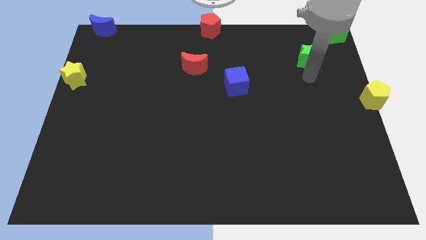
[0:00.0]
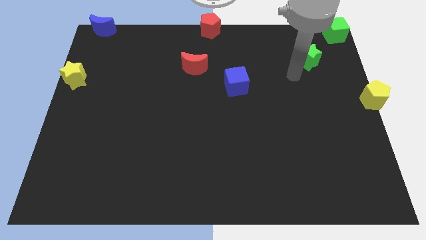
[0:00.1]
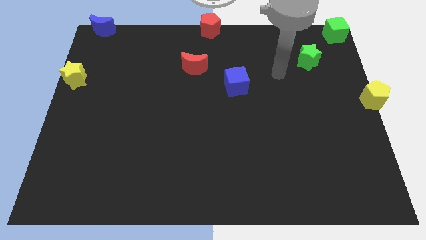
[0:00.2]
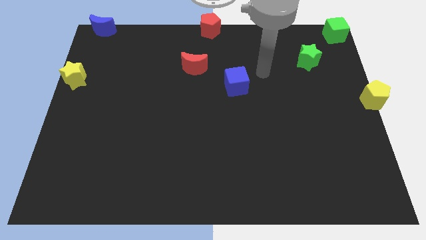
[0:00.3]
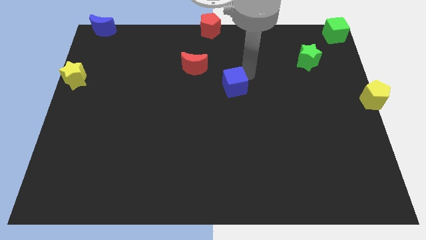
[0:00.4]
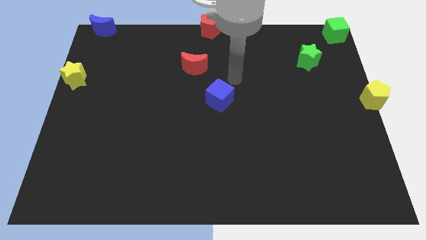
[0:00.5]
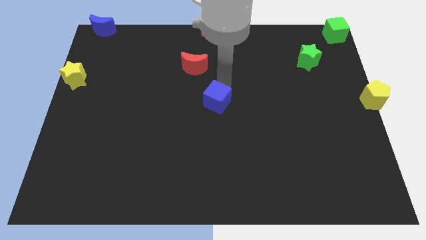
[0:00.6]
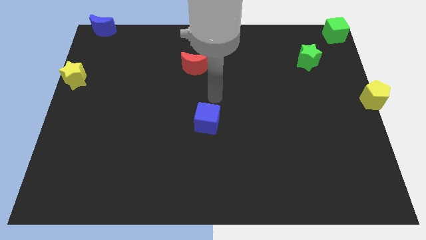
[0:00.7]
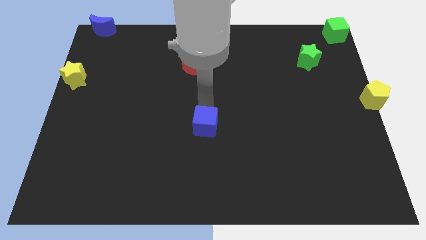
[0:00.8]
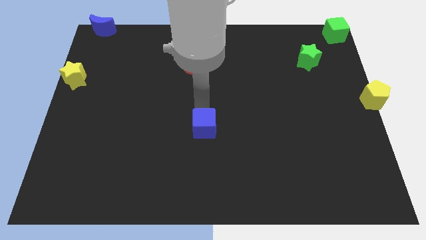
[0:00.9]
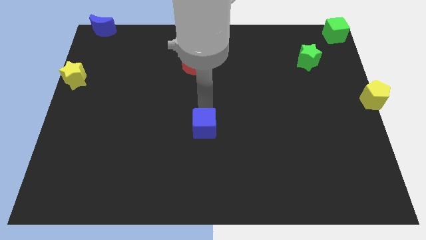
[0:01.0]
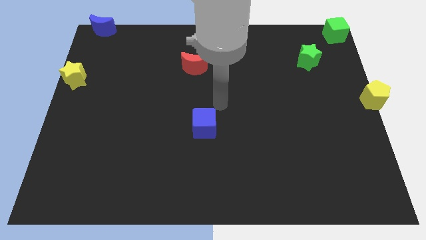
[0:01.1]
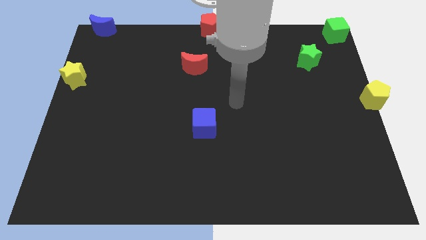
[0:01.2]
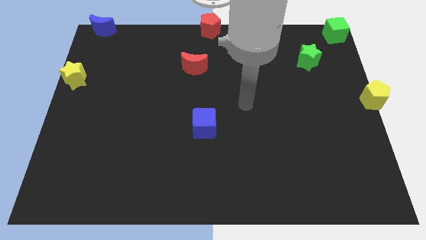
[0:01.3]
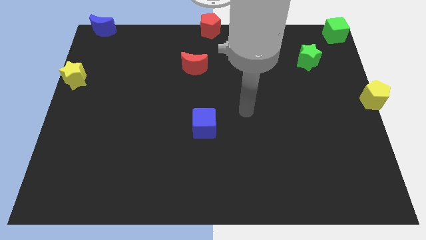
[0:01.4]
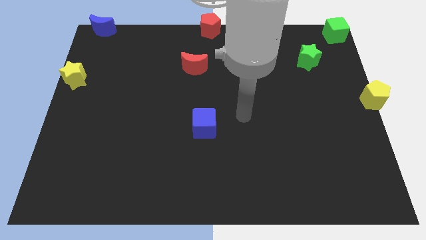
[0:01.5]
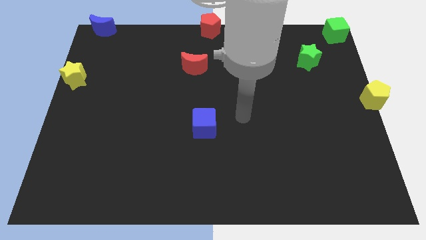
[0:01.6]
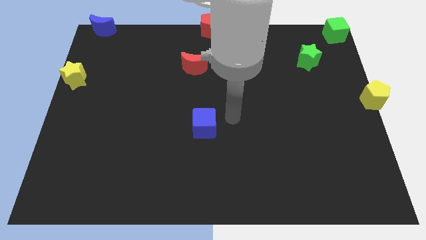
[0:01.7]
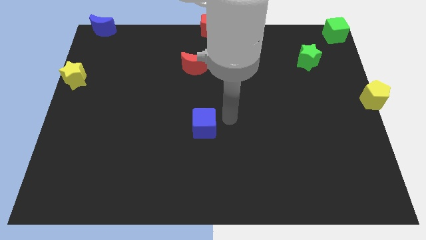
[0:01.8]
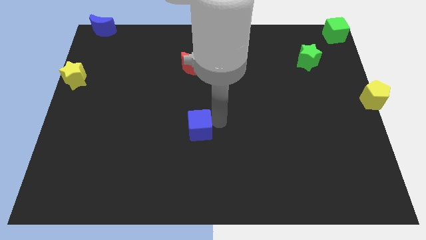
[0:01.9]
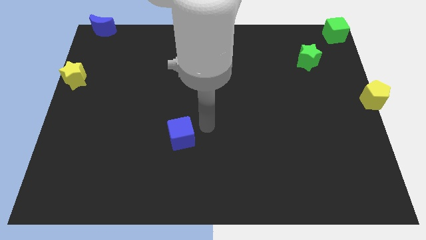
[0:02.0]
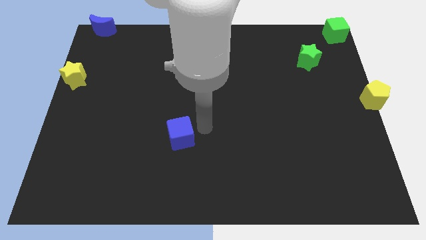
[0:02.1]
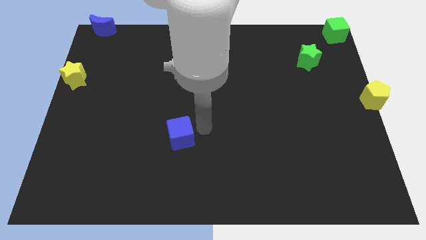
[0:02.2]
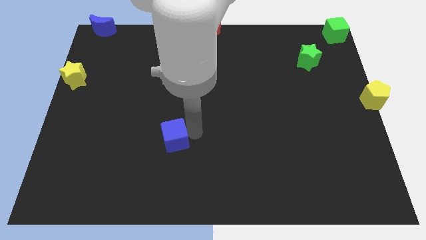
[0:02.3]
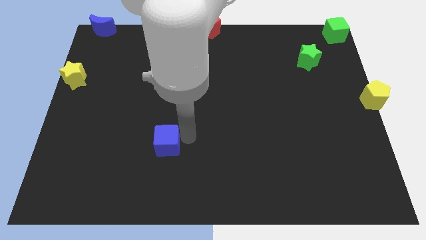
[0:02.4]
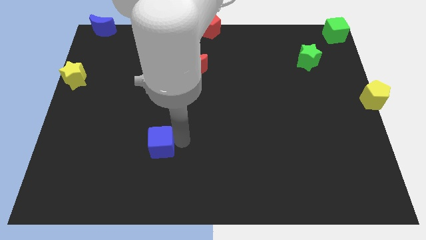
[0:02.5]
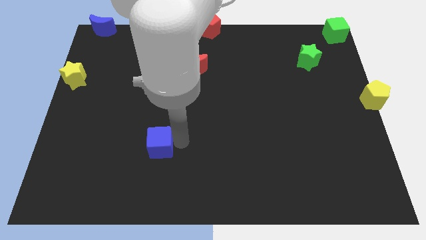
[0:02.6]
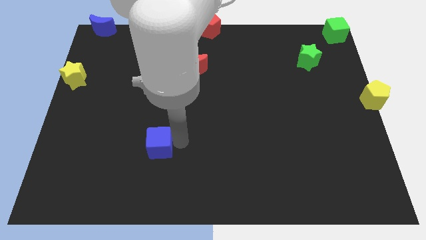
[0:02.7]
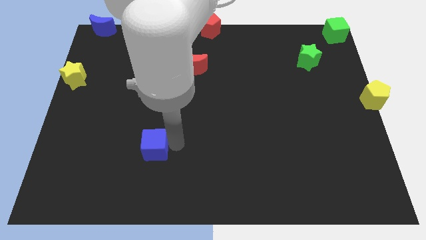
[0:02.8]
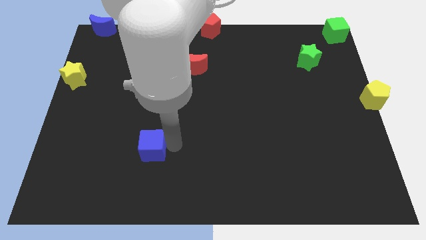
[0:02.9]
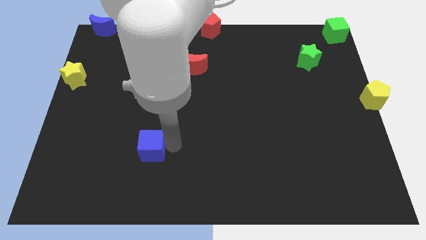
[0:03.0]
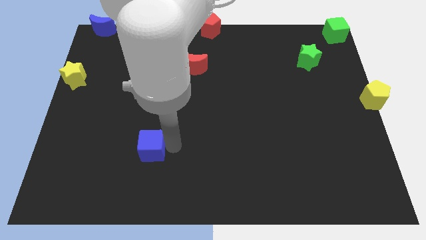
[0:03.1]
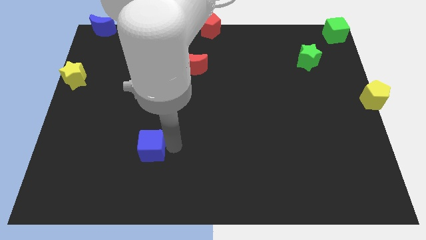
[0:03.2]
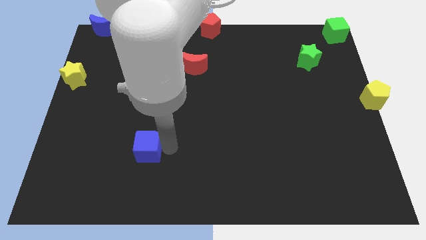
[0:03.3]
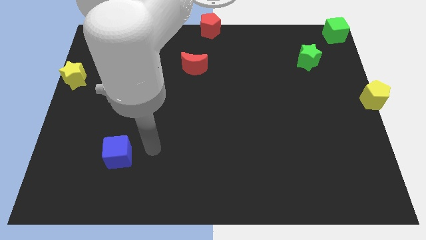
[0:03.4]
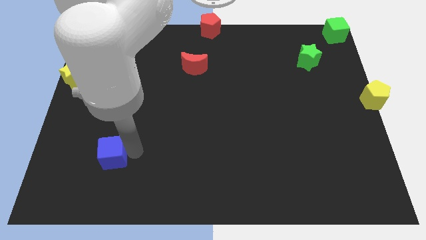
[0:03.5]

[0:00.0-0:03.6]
slide the blue cube diagonally bottom left to the red moon

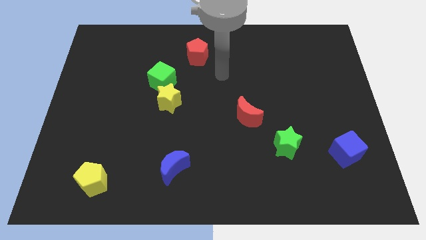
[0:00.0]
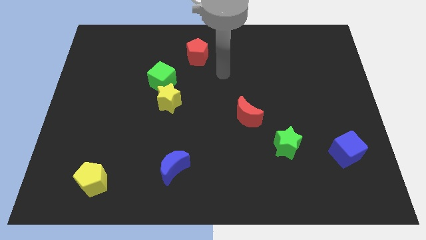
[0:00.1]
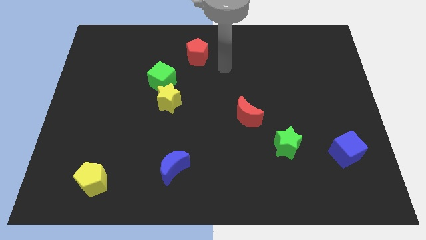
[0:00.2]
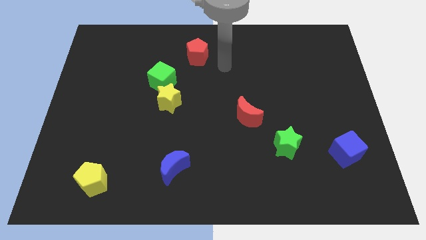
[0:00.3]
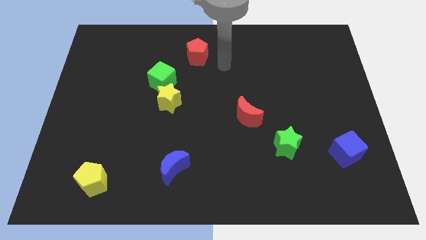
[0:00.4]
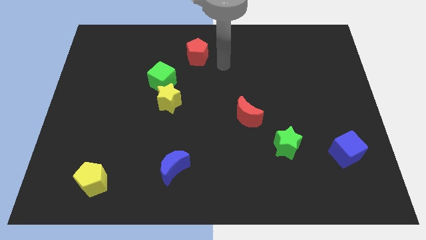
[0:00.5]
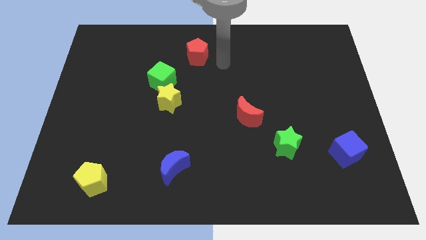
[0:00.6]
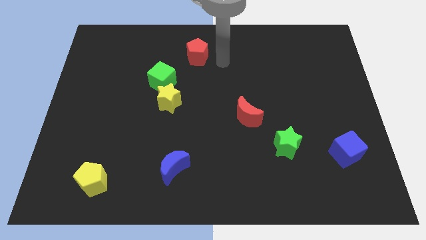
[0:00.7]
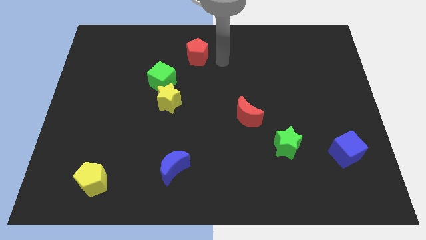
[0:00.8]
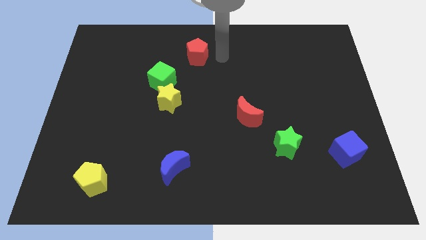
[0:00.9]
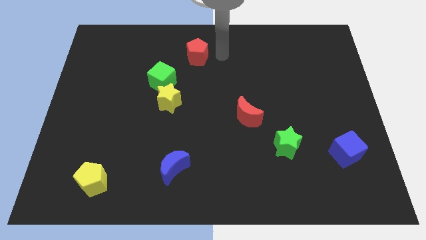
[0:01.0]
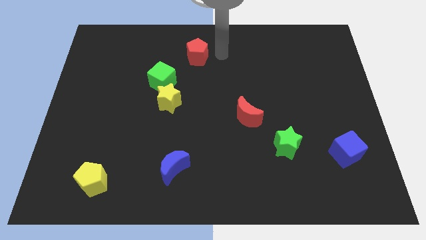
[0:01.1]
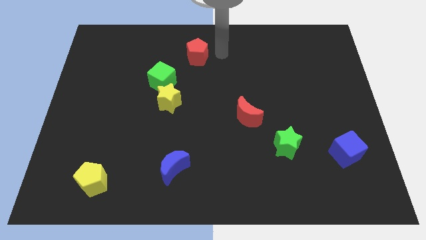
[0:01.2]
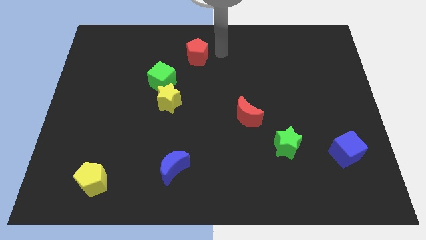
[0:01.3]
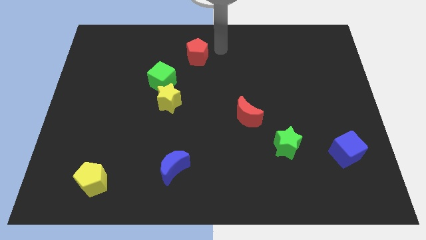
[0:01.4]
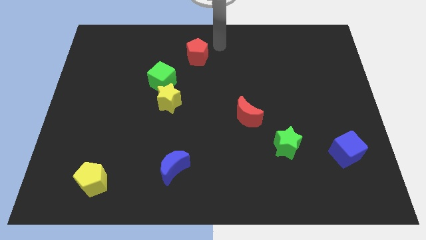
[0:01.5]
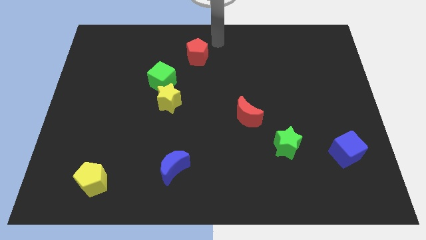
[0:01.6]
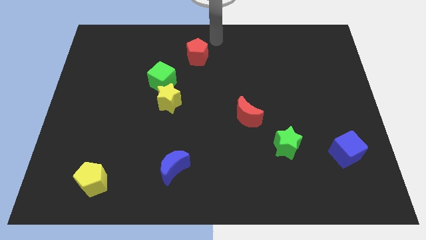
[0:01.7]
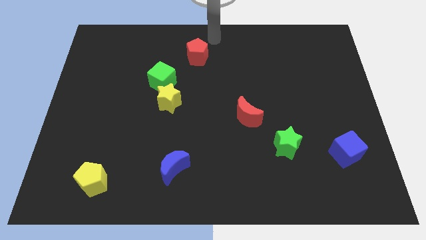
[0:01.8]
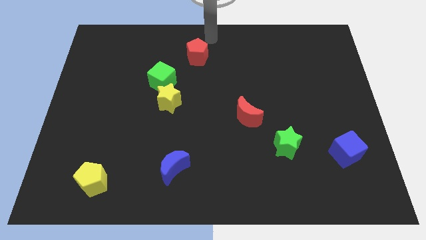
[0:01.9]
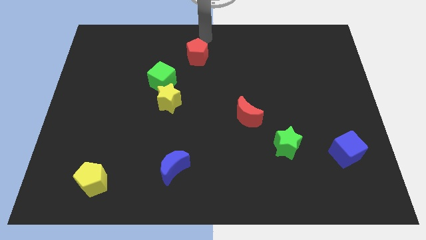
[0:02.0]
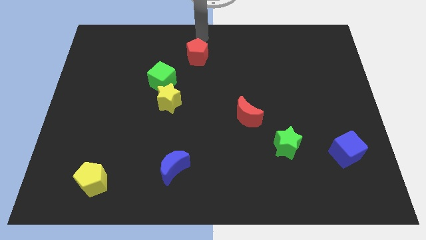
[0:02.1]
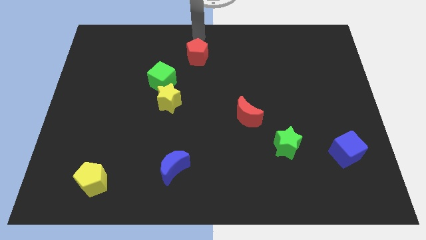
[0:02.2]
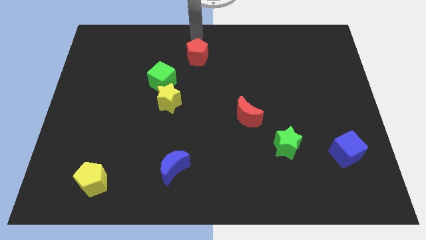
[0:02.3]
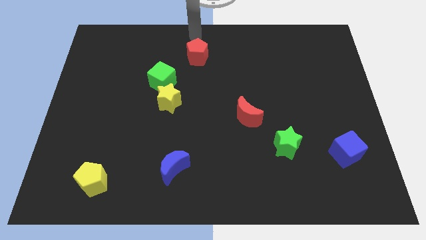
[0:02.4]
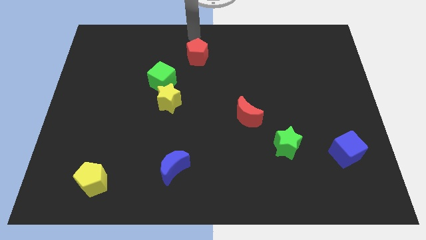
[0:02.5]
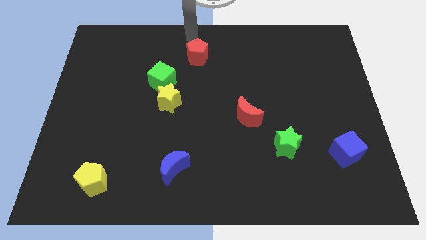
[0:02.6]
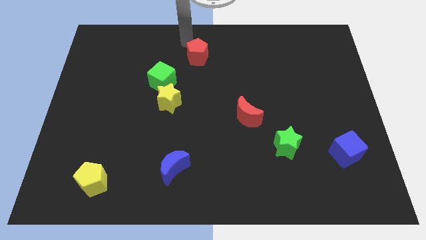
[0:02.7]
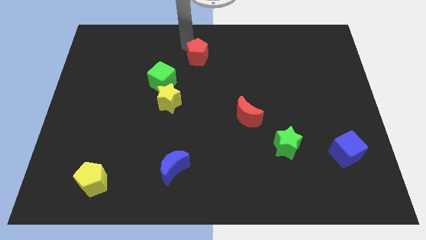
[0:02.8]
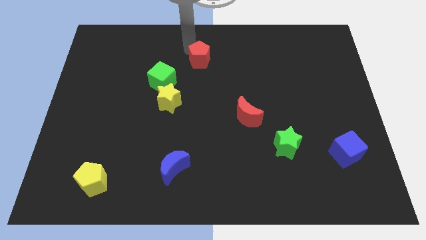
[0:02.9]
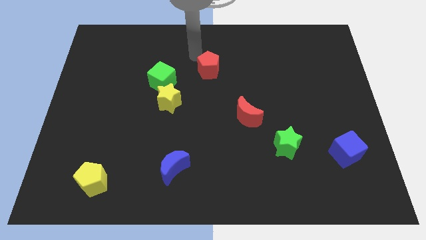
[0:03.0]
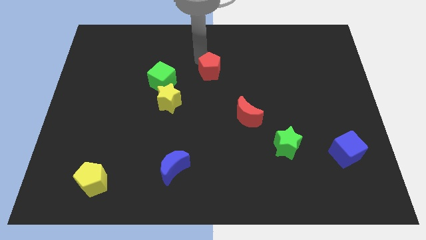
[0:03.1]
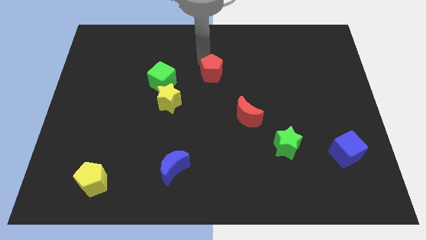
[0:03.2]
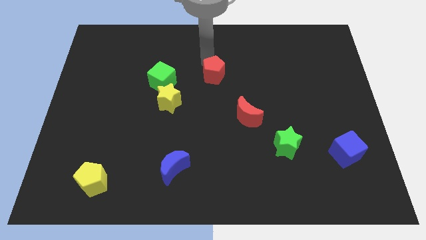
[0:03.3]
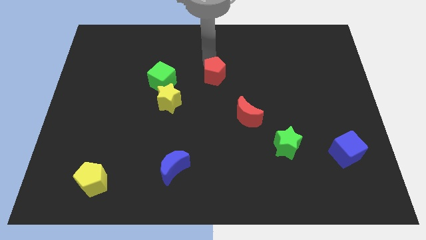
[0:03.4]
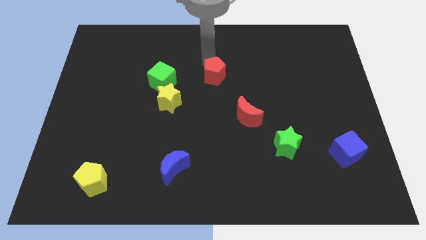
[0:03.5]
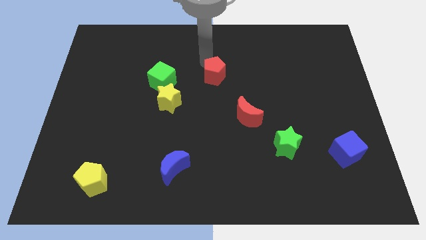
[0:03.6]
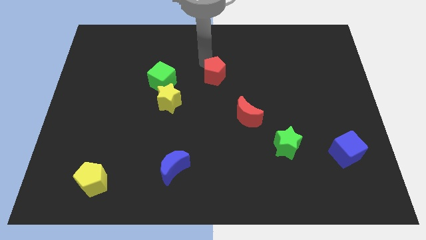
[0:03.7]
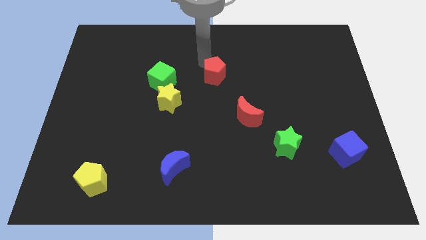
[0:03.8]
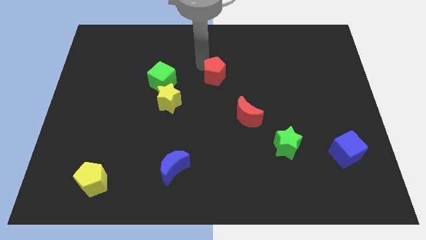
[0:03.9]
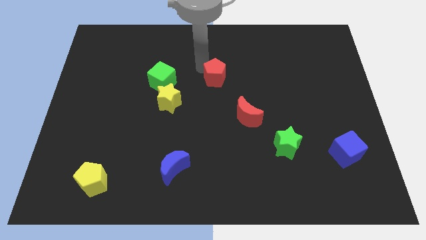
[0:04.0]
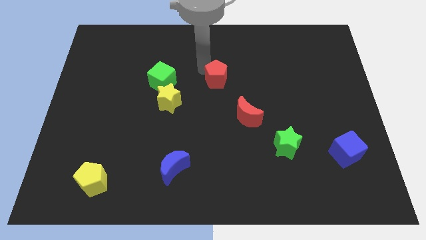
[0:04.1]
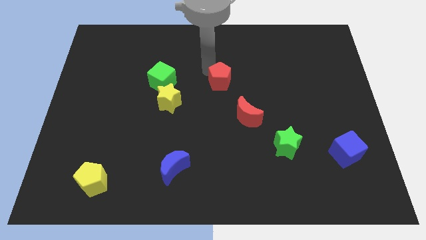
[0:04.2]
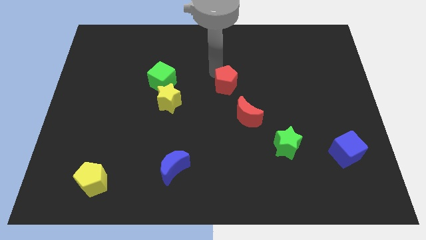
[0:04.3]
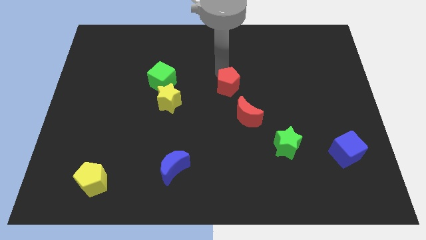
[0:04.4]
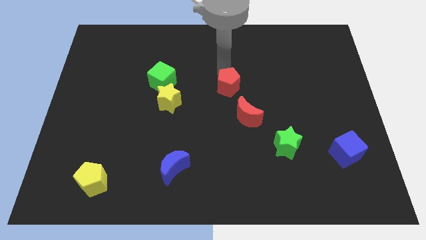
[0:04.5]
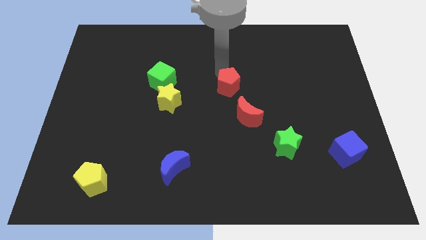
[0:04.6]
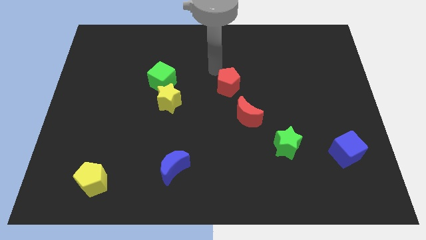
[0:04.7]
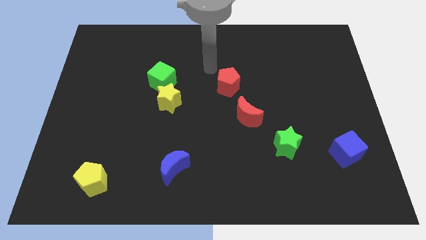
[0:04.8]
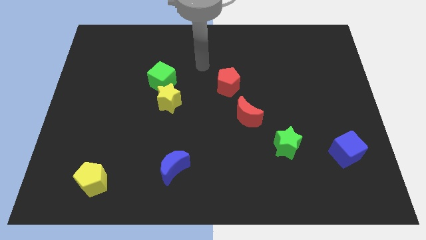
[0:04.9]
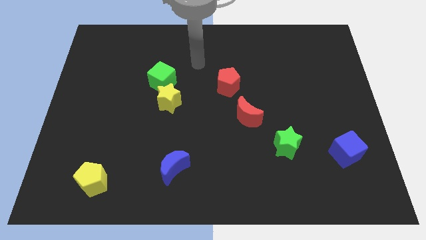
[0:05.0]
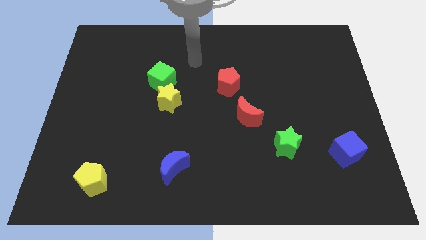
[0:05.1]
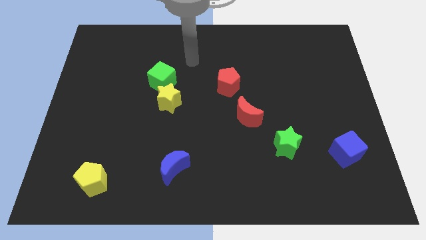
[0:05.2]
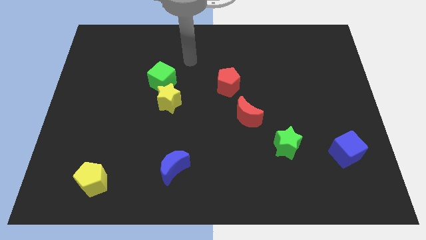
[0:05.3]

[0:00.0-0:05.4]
slide red pentagon to the top right of the red moon
